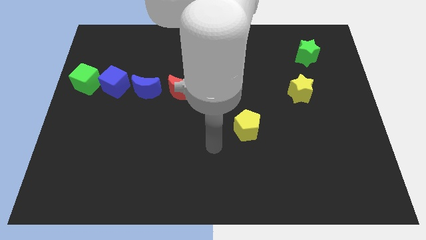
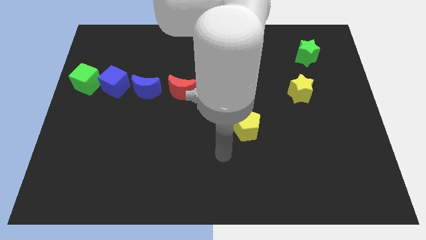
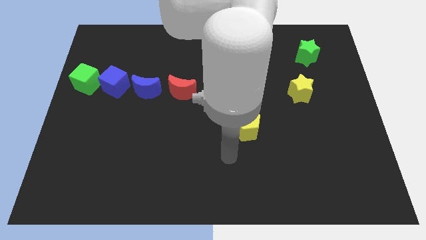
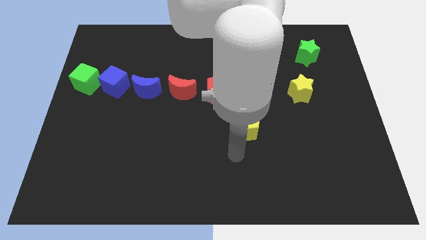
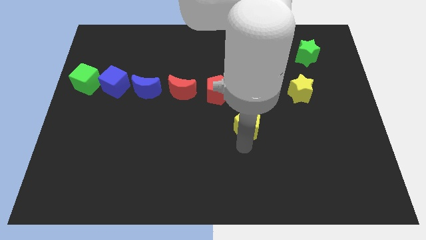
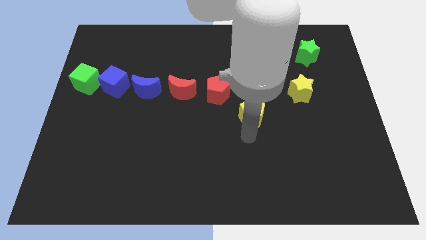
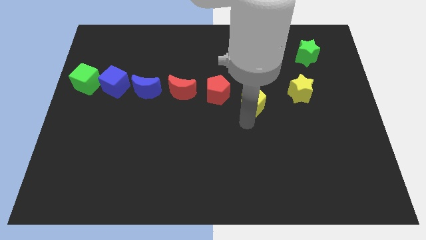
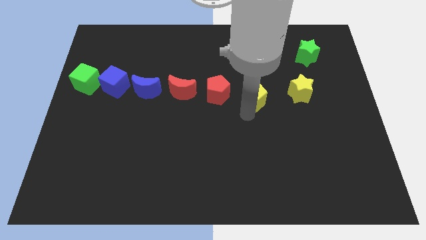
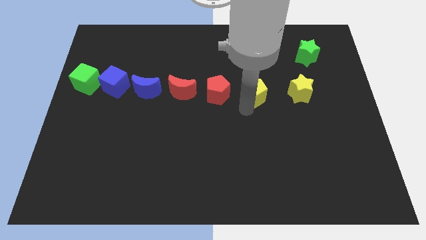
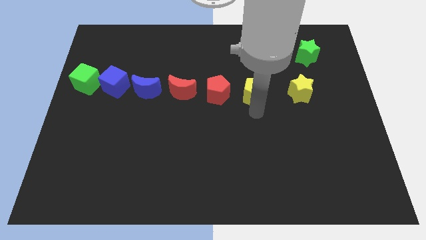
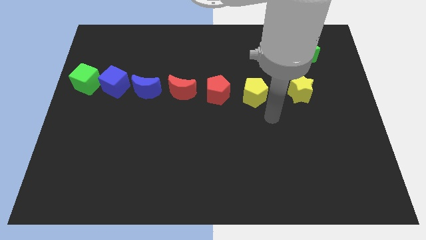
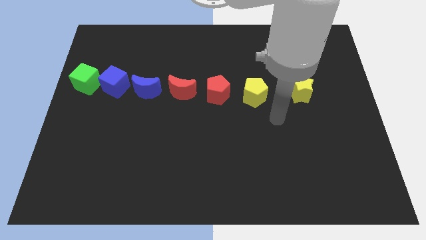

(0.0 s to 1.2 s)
place the yellow pentagon to the right of the red pentagon

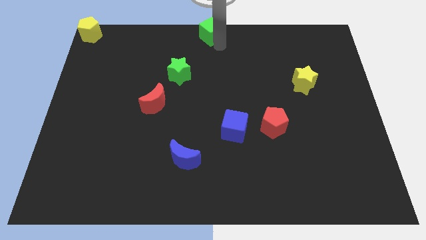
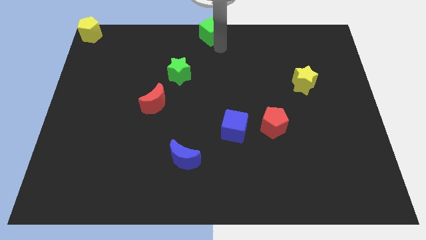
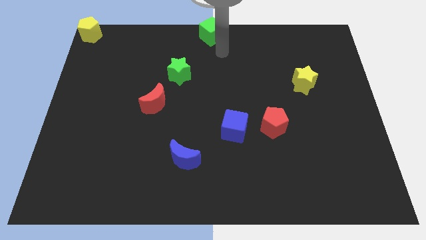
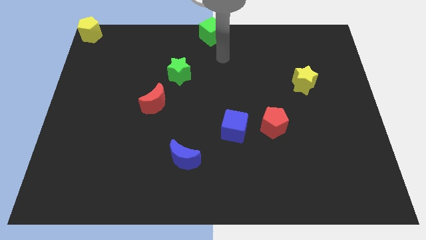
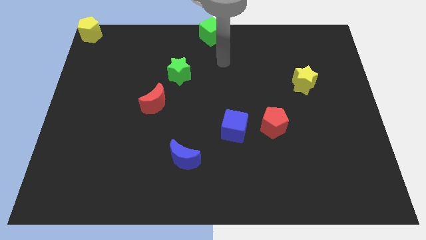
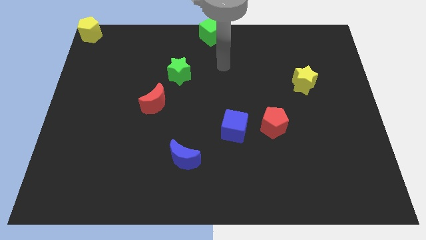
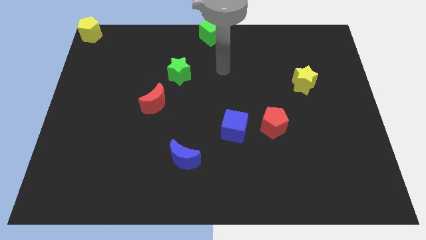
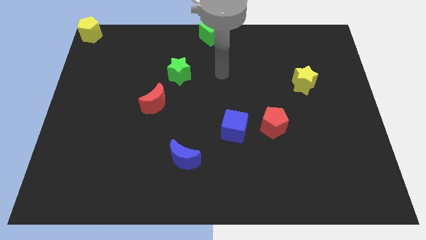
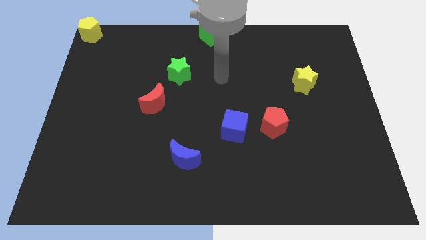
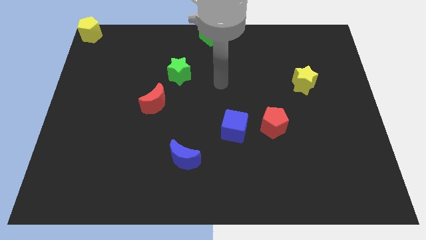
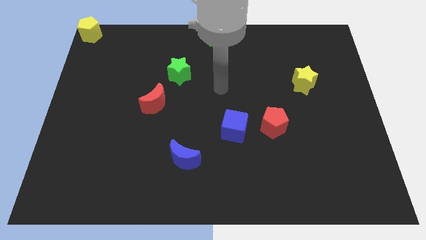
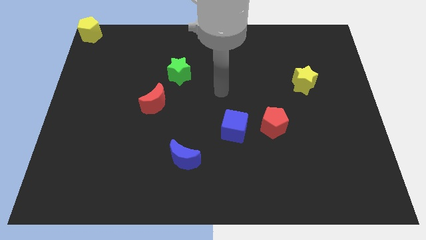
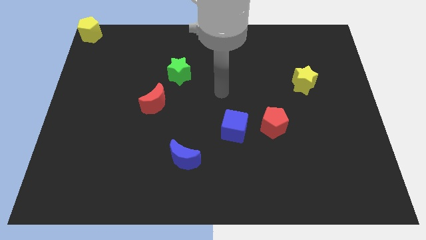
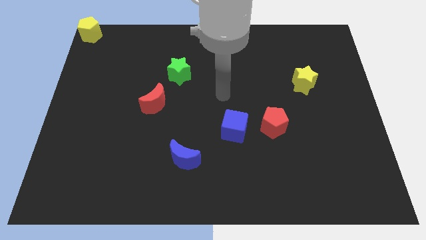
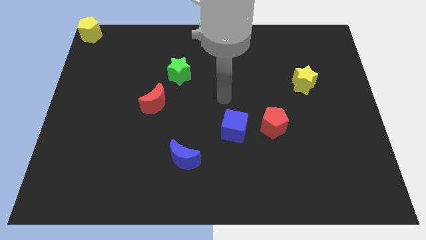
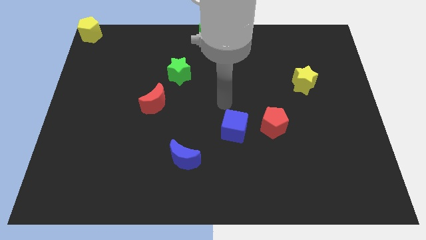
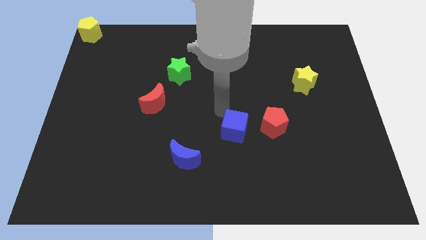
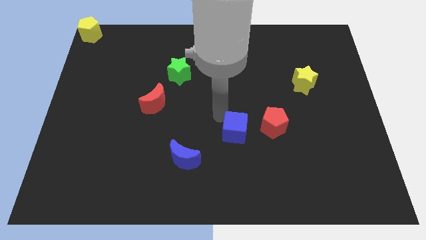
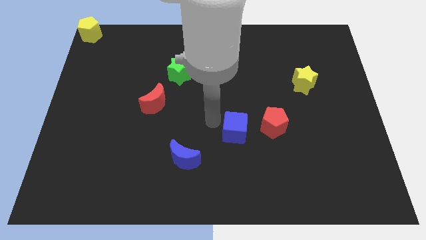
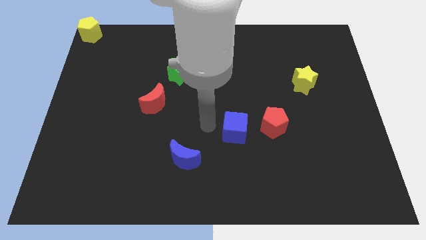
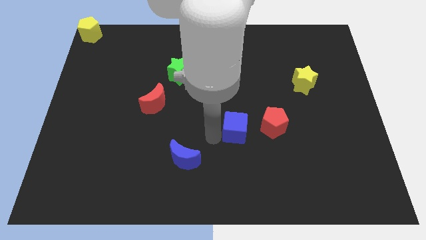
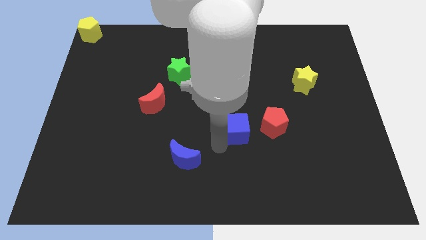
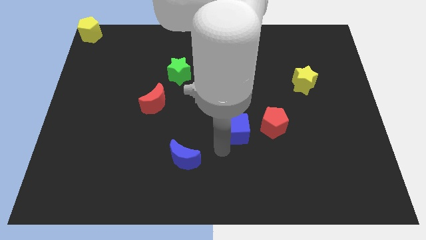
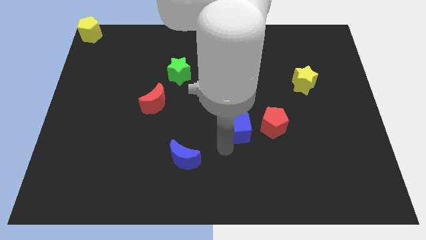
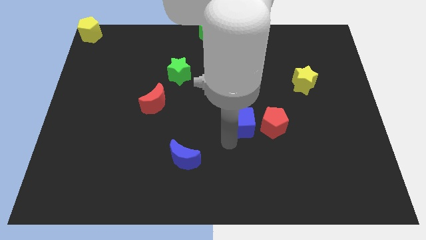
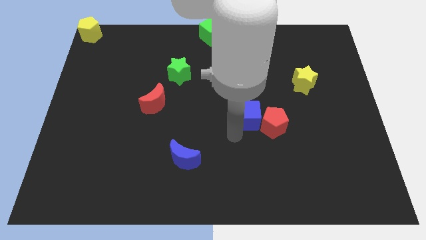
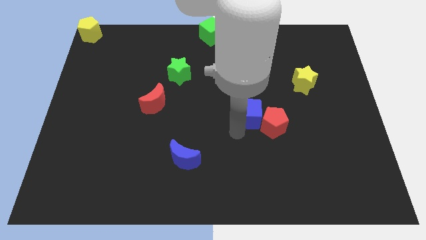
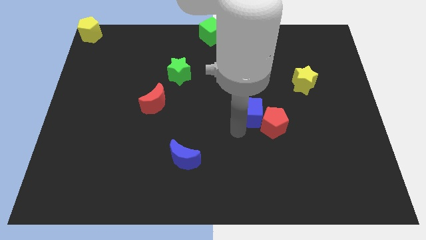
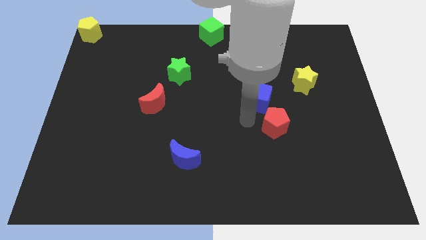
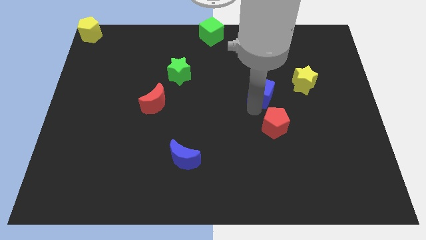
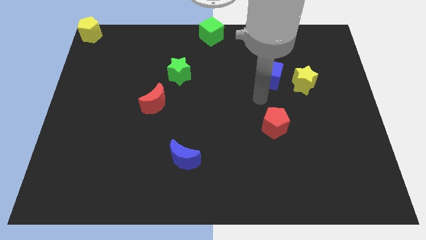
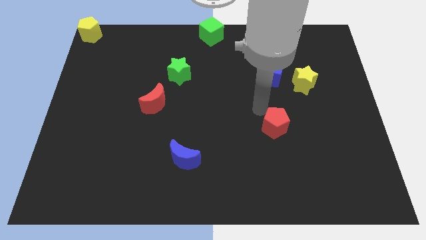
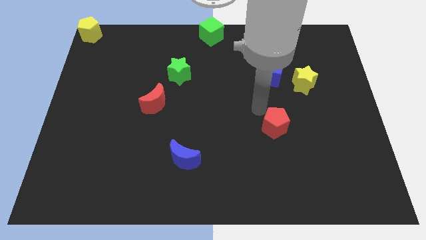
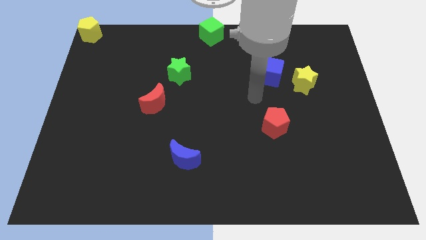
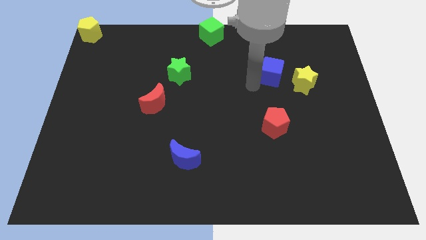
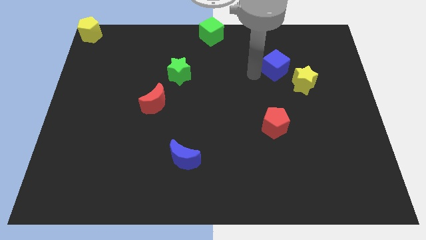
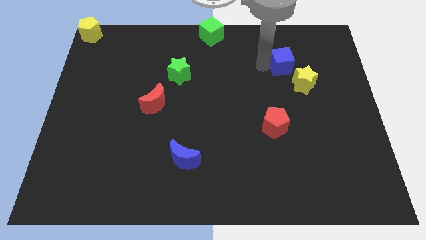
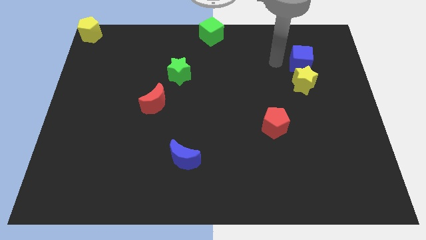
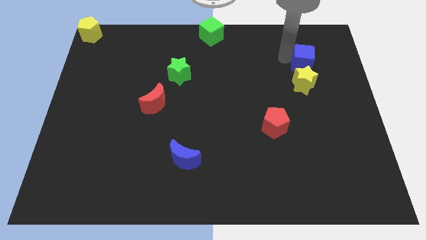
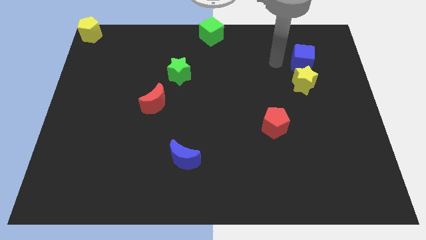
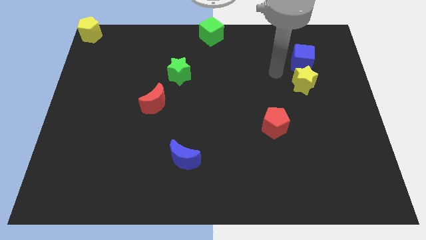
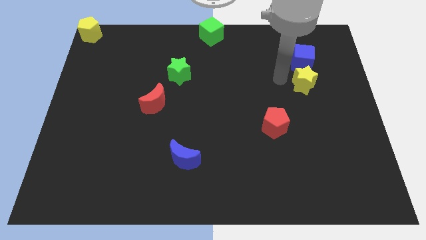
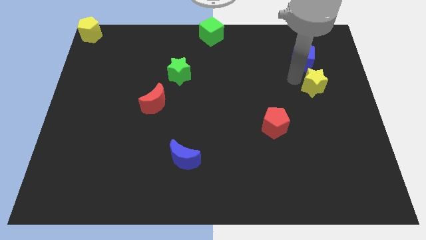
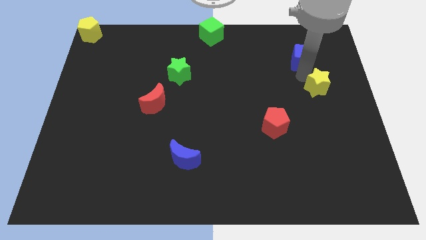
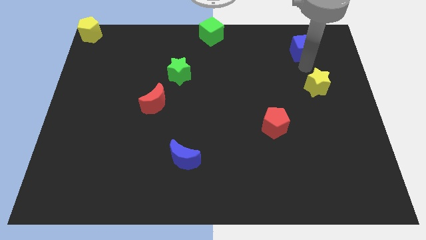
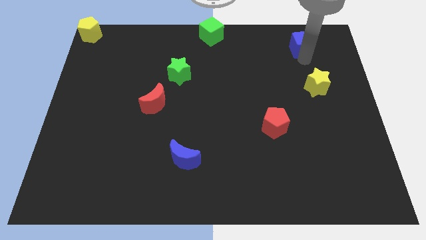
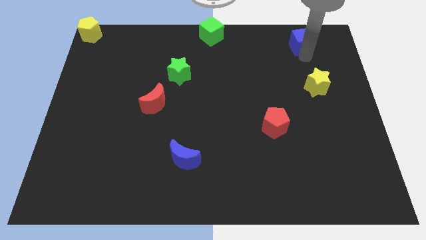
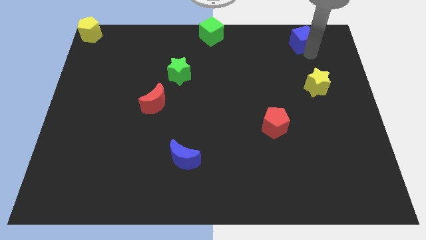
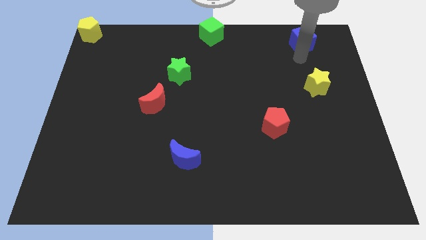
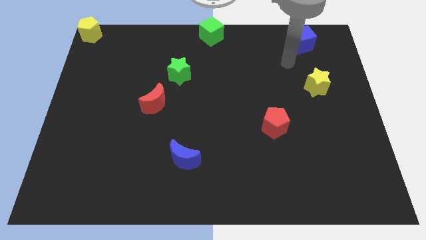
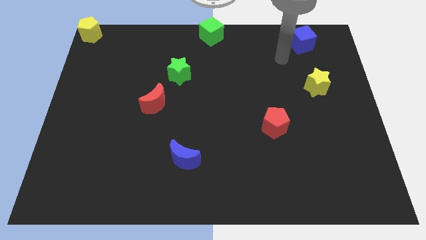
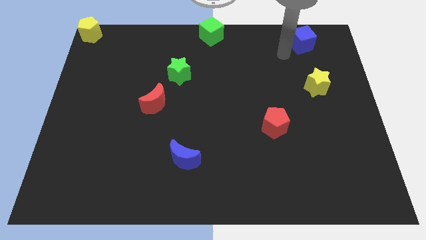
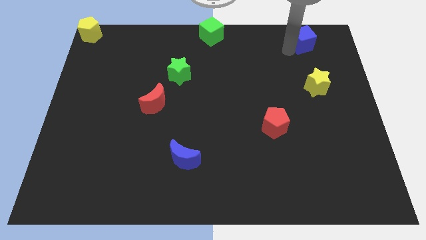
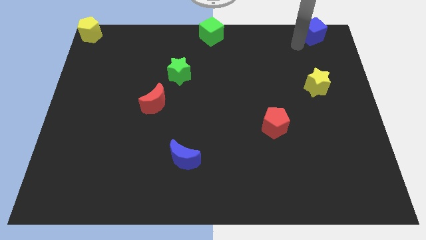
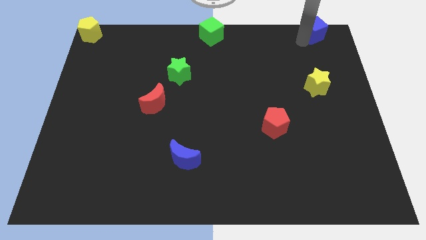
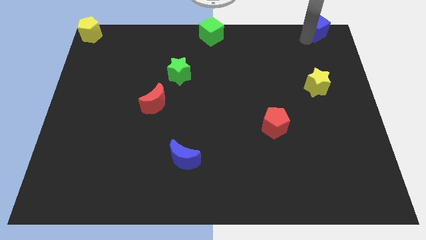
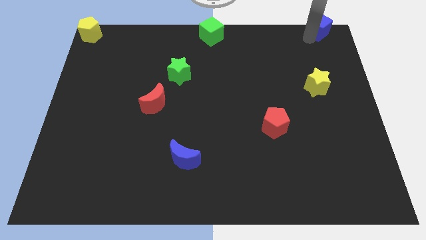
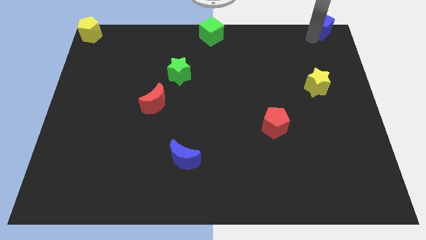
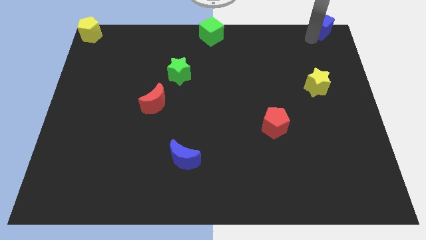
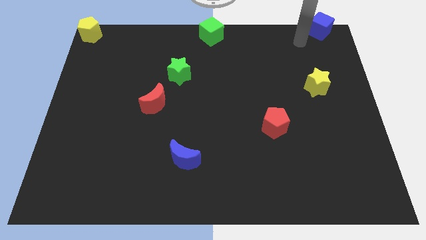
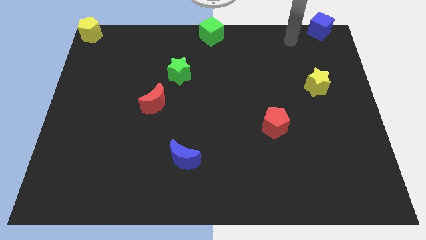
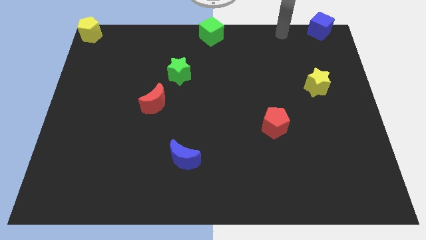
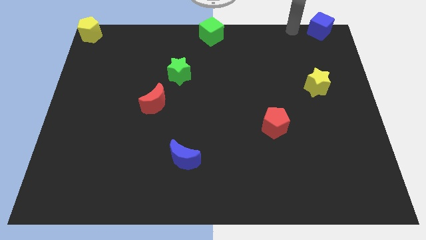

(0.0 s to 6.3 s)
move the blue cube to top right corner of the board

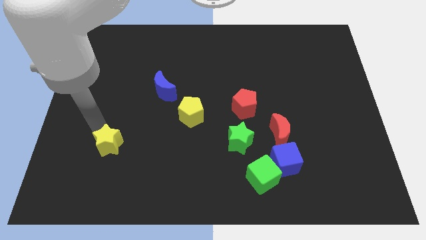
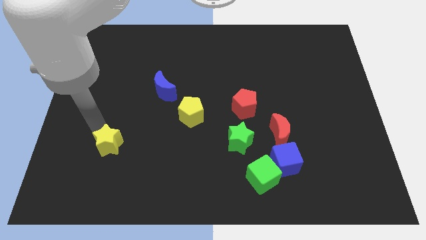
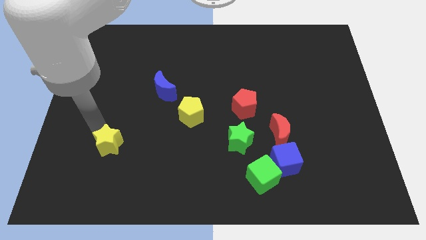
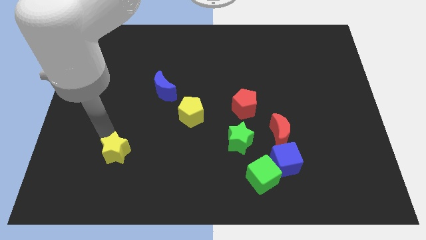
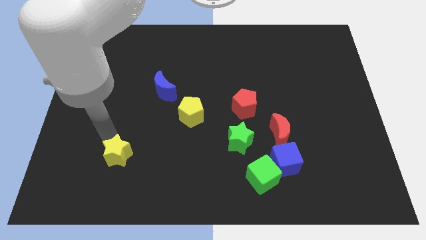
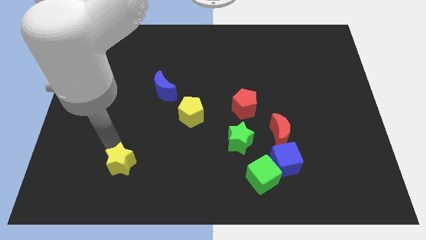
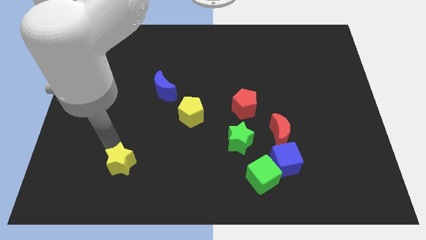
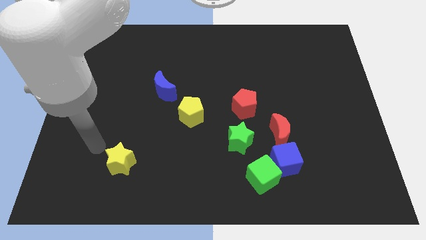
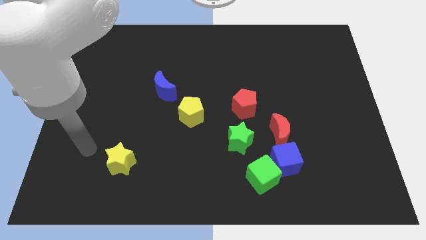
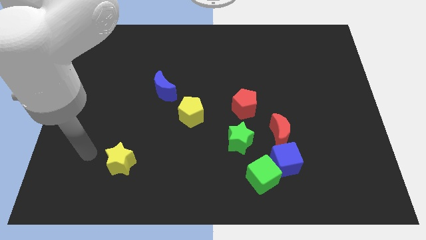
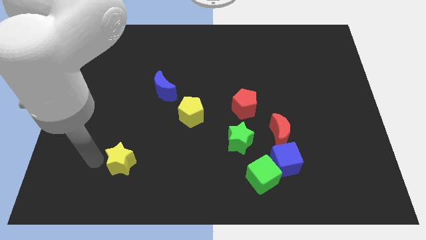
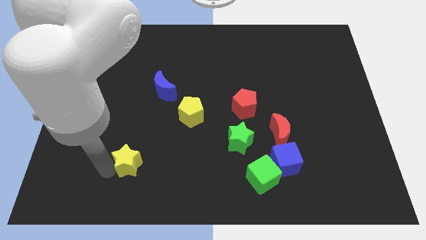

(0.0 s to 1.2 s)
move yellow star towards bottom center
